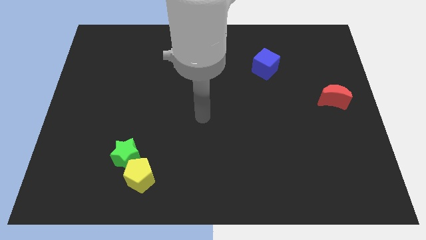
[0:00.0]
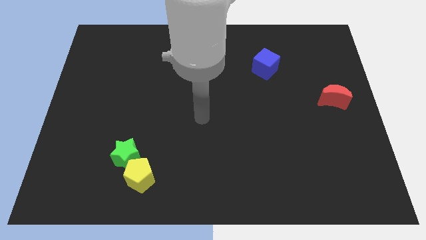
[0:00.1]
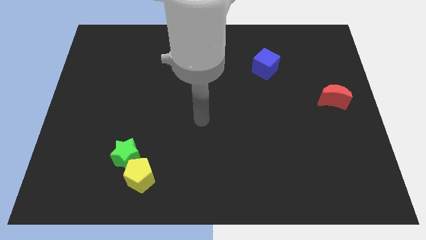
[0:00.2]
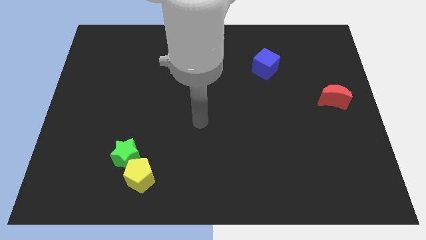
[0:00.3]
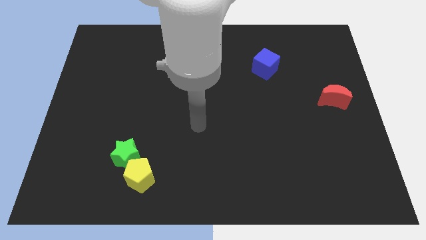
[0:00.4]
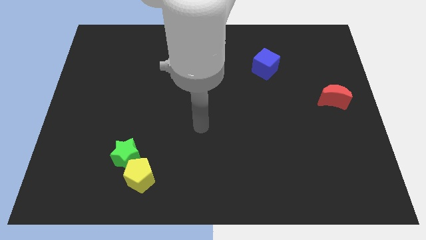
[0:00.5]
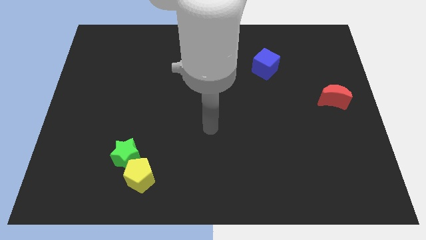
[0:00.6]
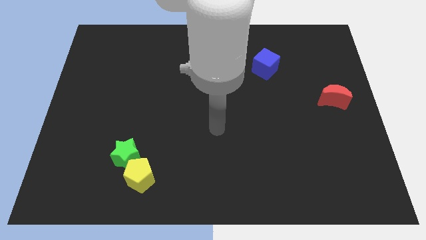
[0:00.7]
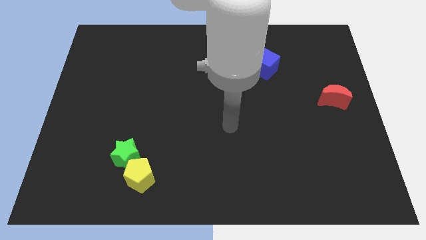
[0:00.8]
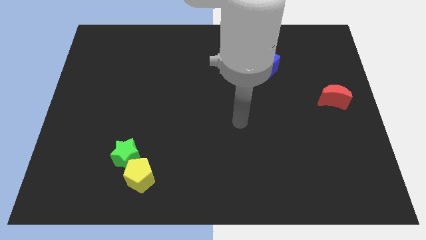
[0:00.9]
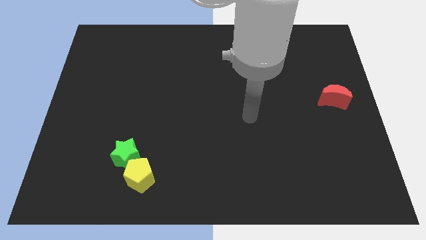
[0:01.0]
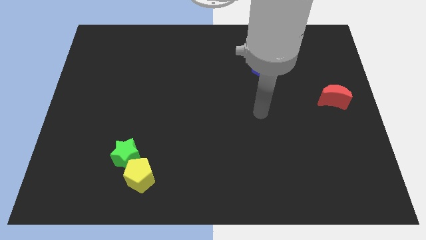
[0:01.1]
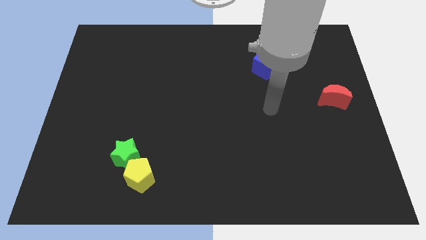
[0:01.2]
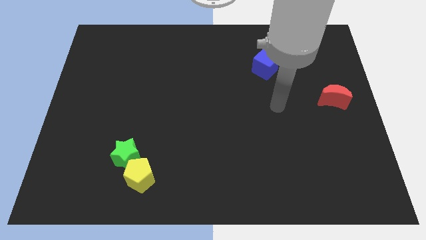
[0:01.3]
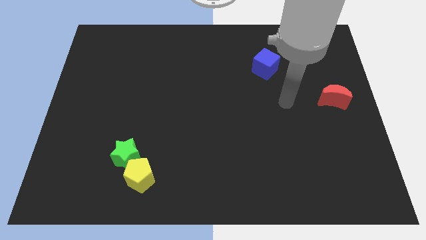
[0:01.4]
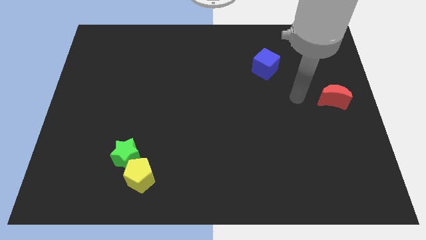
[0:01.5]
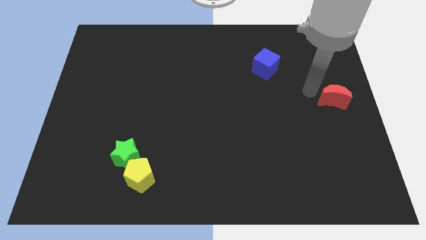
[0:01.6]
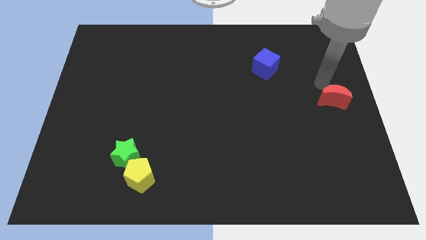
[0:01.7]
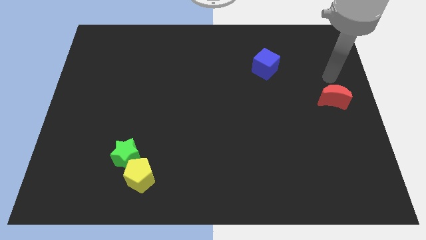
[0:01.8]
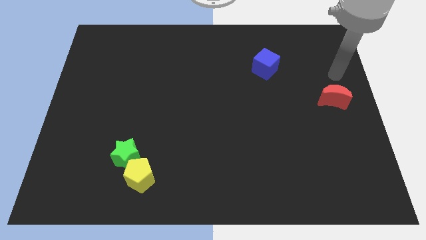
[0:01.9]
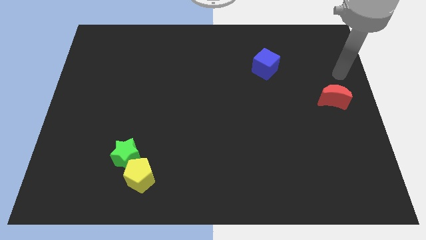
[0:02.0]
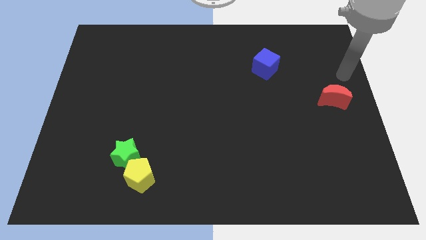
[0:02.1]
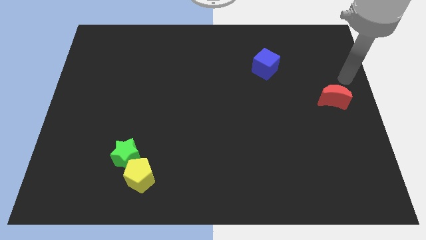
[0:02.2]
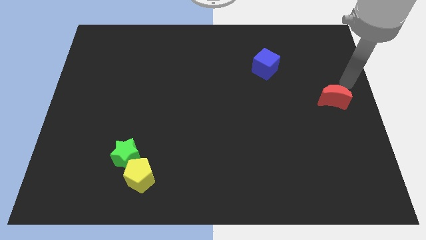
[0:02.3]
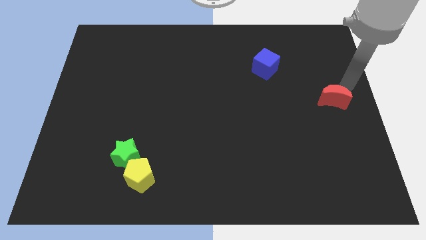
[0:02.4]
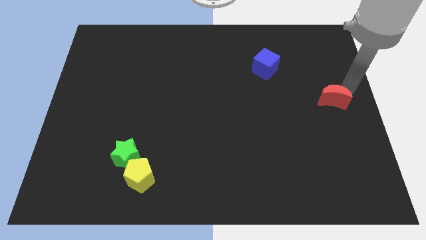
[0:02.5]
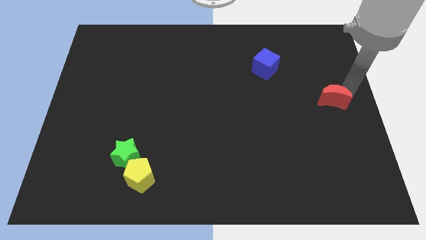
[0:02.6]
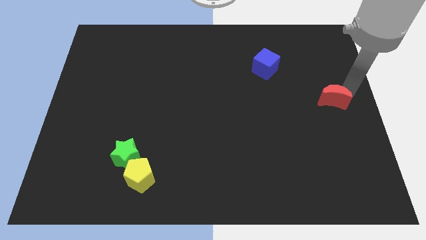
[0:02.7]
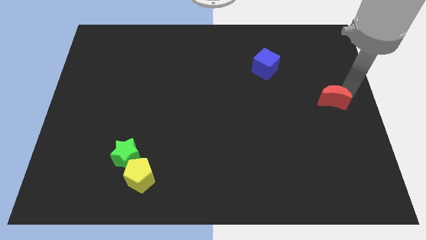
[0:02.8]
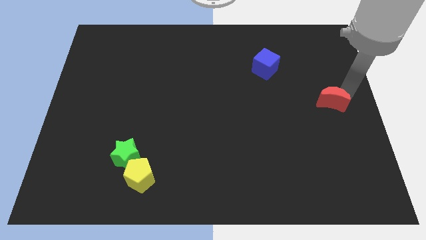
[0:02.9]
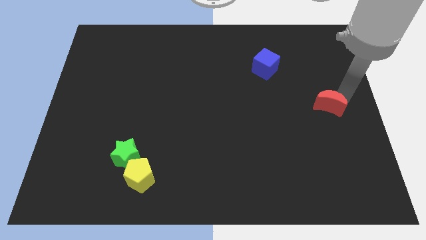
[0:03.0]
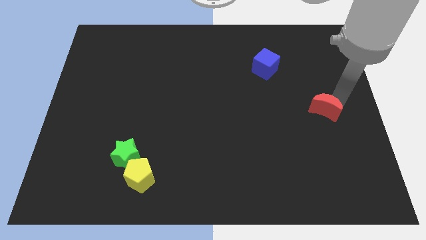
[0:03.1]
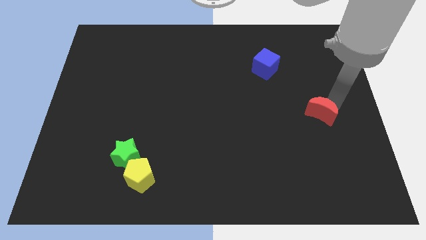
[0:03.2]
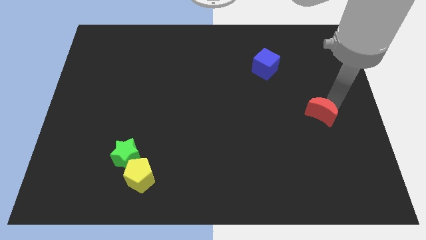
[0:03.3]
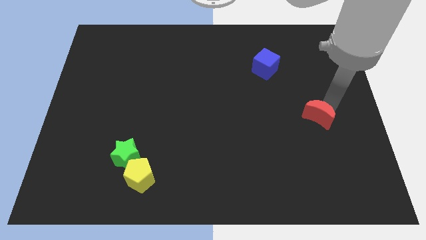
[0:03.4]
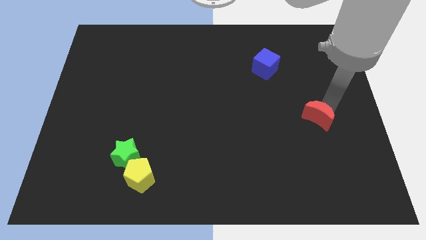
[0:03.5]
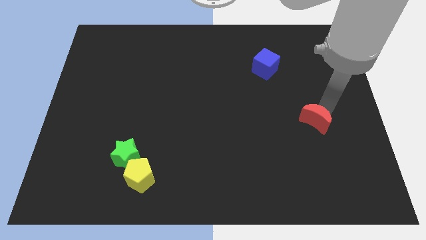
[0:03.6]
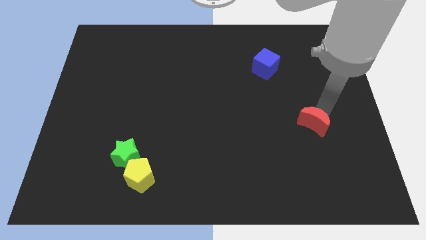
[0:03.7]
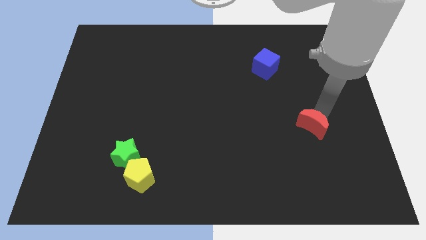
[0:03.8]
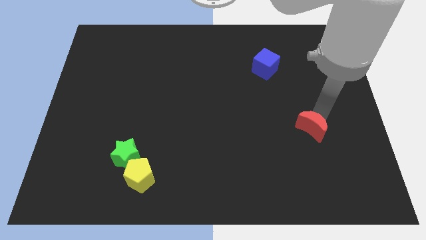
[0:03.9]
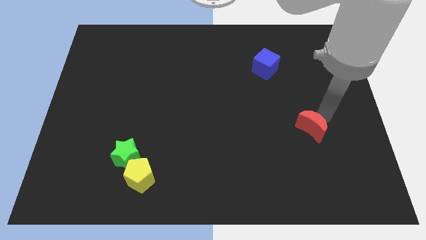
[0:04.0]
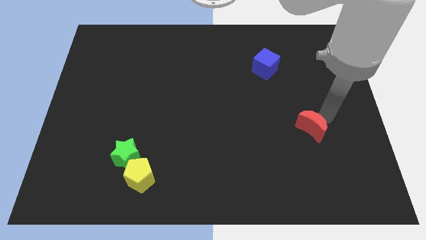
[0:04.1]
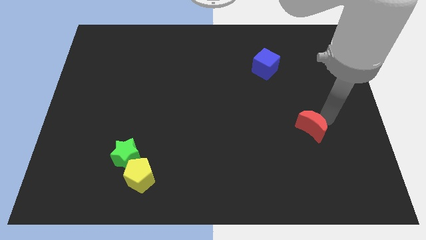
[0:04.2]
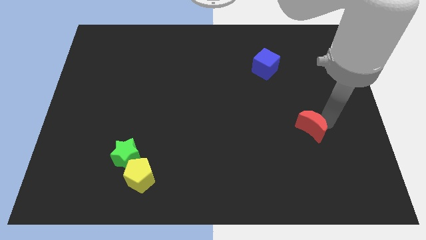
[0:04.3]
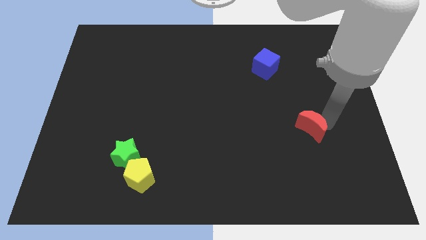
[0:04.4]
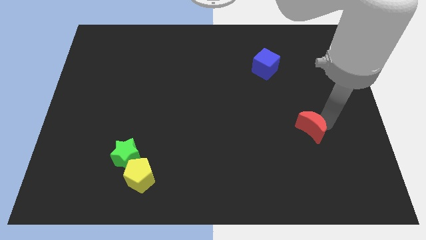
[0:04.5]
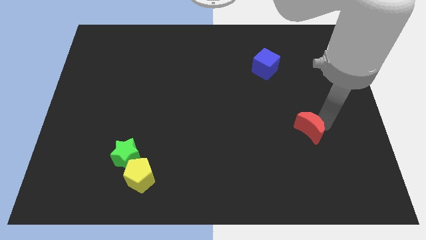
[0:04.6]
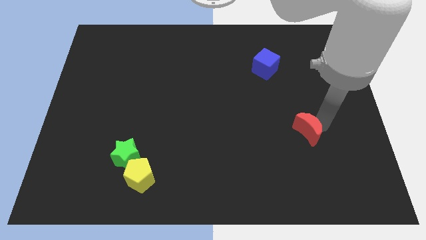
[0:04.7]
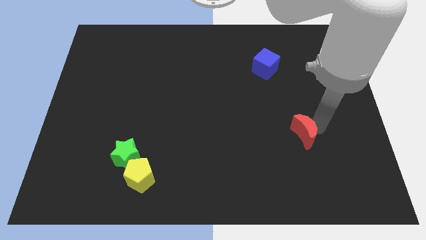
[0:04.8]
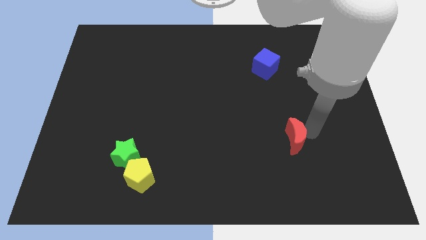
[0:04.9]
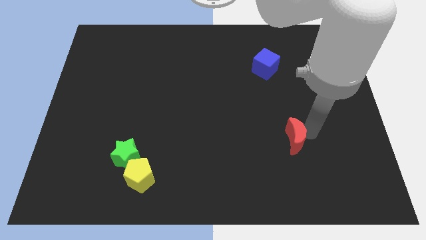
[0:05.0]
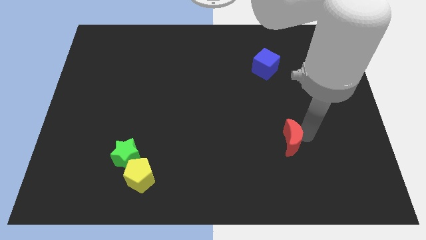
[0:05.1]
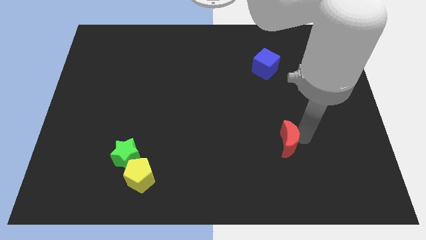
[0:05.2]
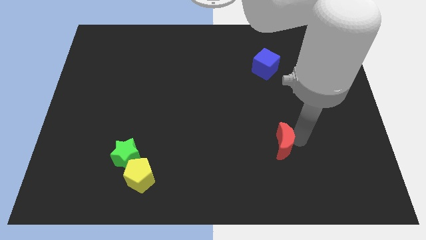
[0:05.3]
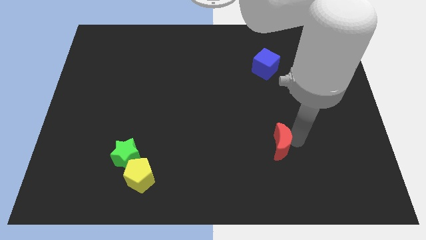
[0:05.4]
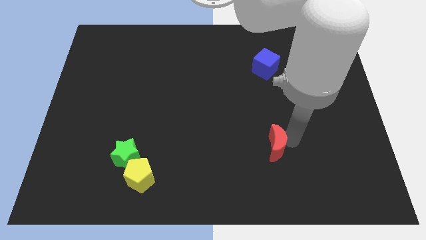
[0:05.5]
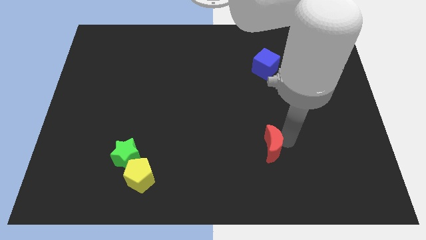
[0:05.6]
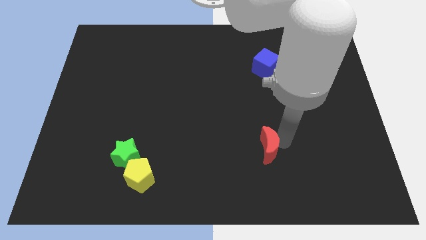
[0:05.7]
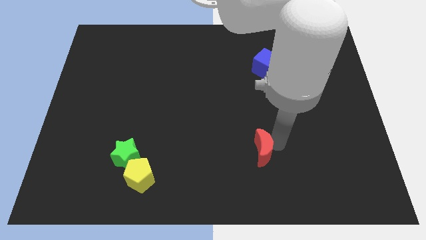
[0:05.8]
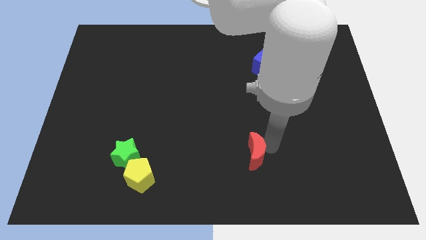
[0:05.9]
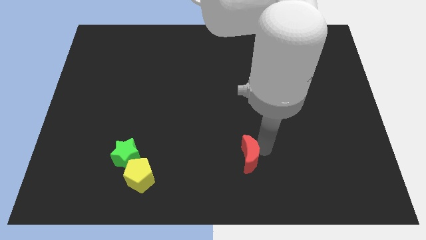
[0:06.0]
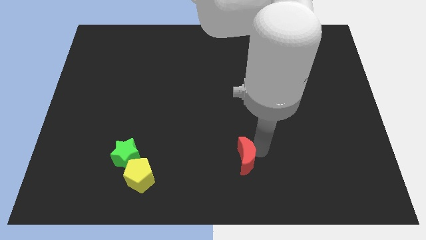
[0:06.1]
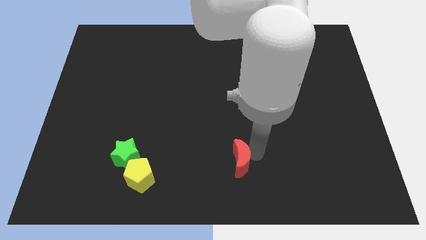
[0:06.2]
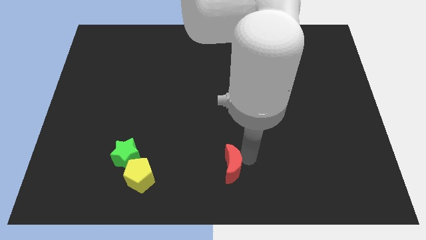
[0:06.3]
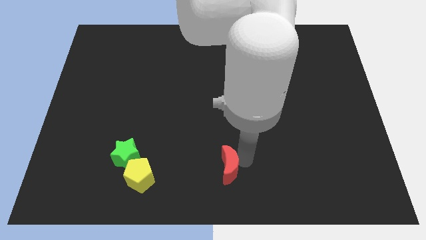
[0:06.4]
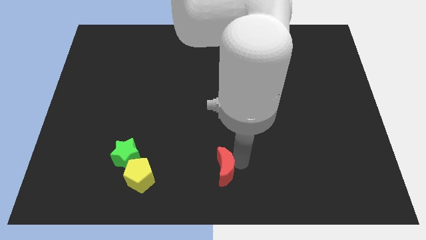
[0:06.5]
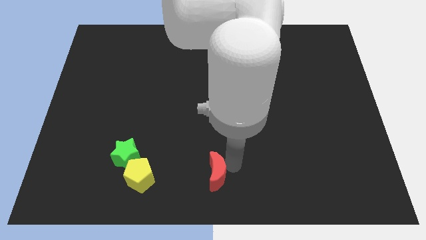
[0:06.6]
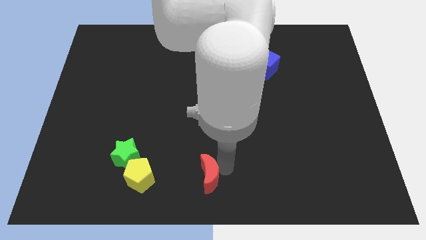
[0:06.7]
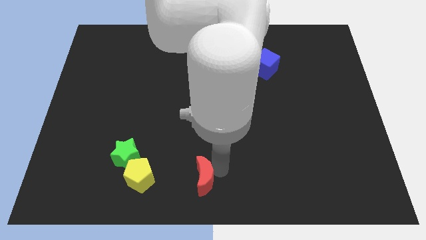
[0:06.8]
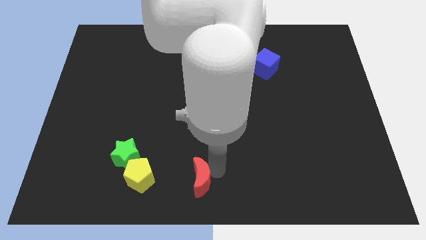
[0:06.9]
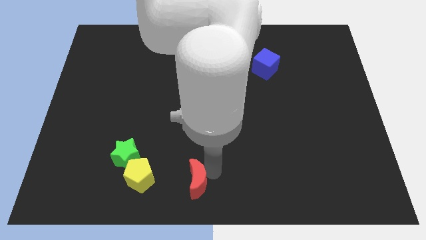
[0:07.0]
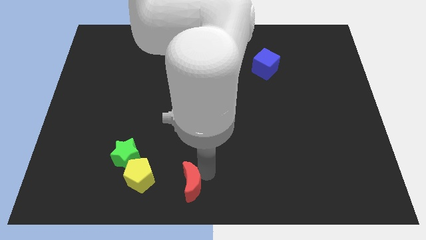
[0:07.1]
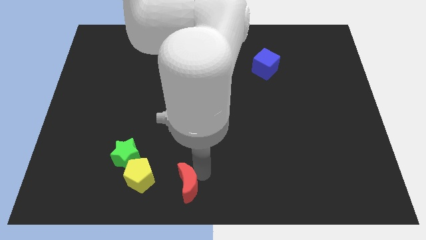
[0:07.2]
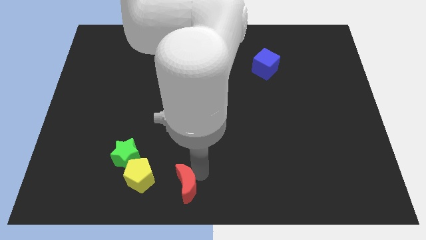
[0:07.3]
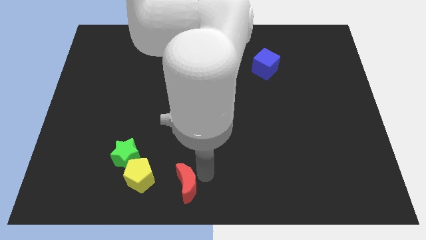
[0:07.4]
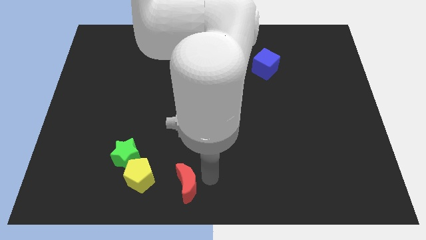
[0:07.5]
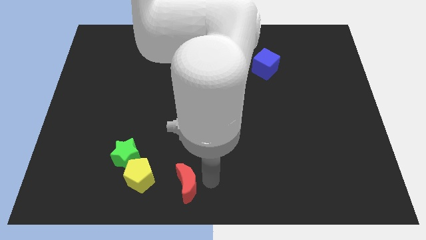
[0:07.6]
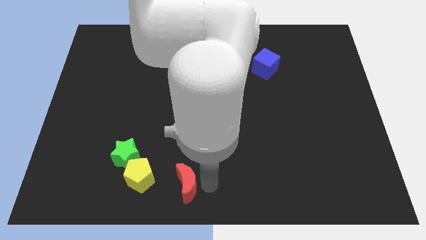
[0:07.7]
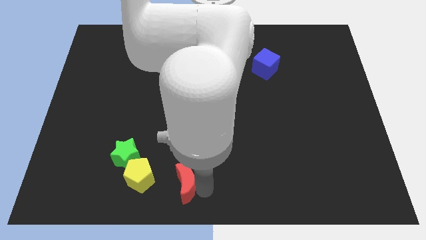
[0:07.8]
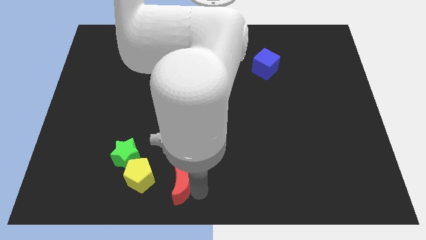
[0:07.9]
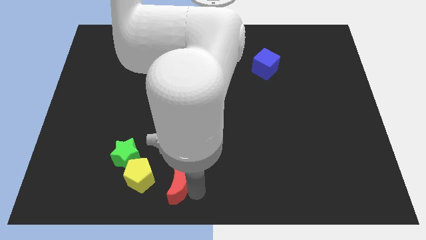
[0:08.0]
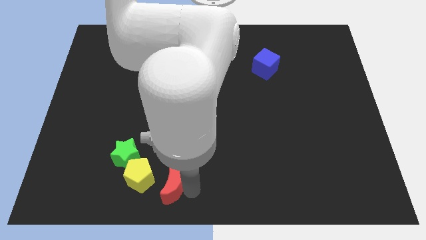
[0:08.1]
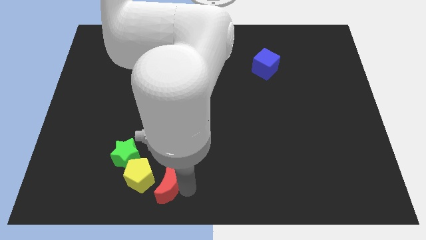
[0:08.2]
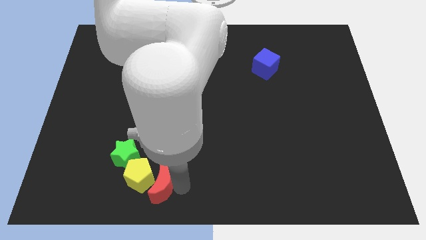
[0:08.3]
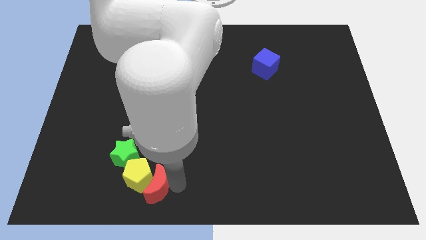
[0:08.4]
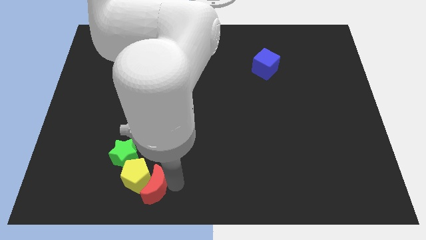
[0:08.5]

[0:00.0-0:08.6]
slide the red block towards the yellow pentagon
